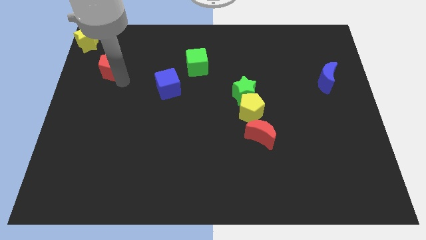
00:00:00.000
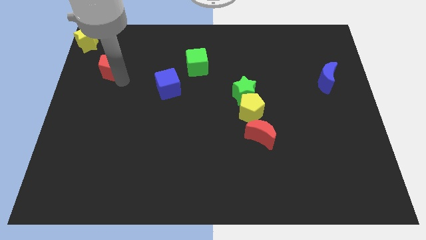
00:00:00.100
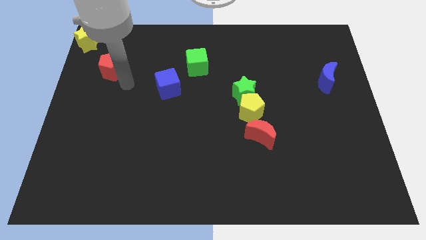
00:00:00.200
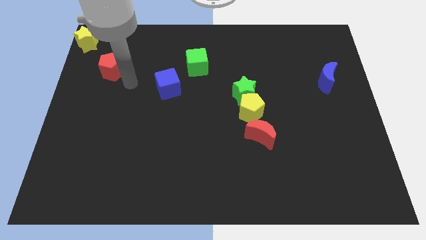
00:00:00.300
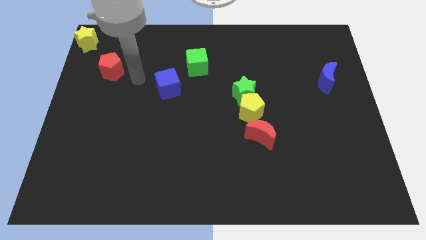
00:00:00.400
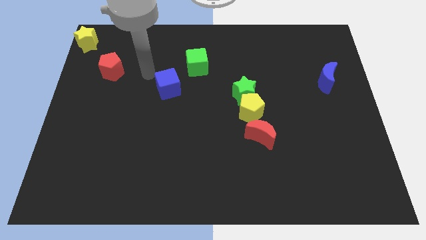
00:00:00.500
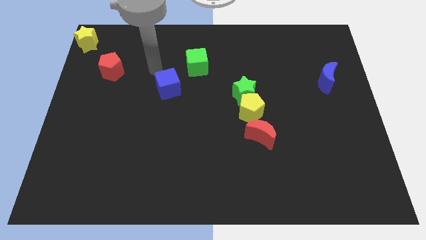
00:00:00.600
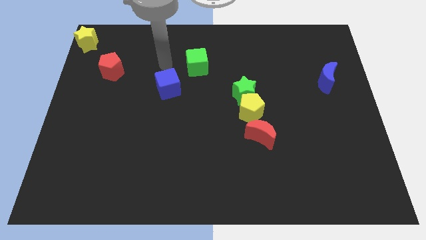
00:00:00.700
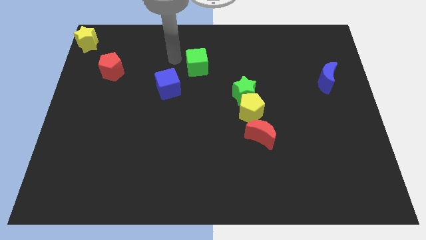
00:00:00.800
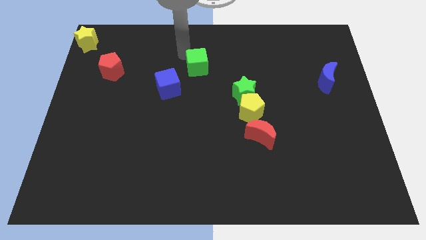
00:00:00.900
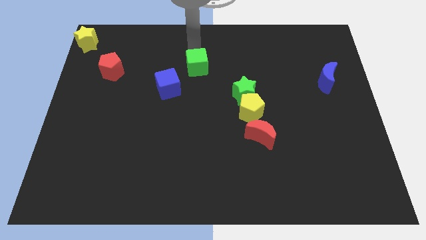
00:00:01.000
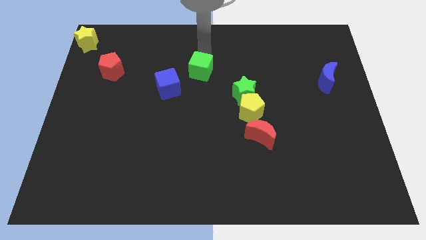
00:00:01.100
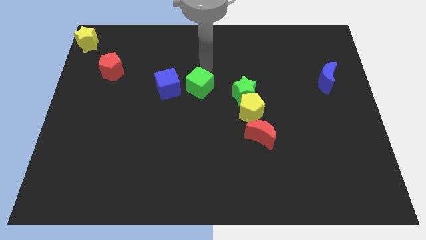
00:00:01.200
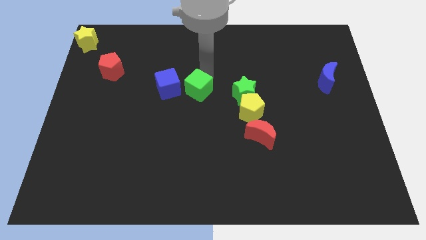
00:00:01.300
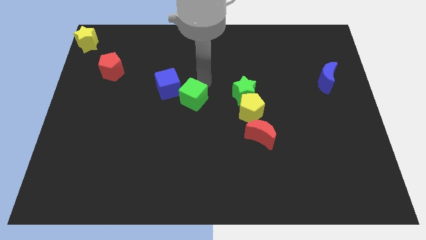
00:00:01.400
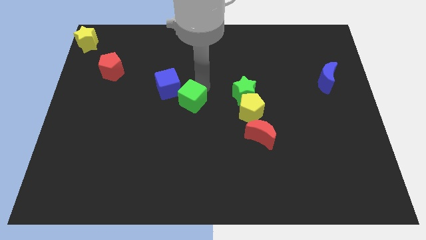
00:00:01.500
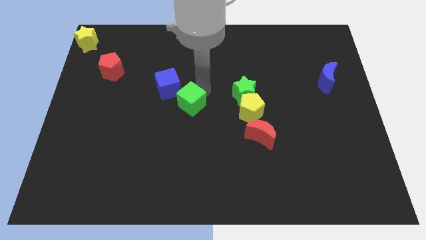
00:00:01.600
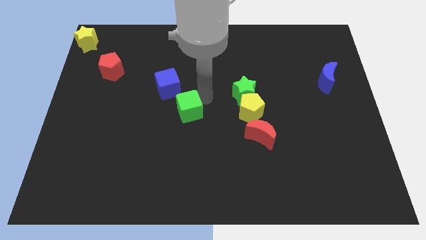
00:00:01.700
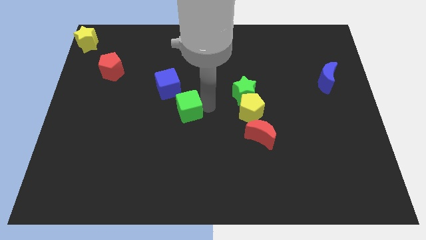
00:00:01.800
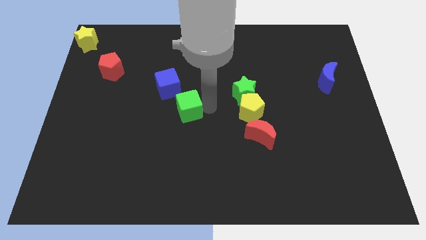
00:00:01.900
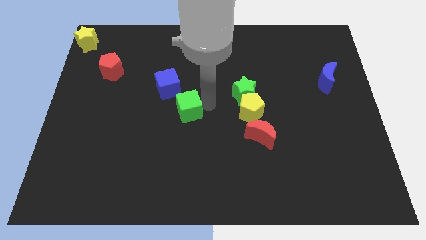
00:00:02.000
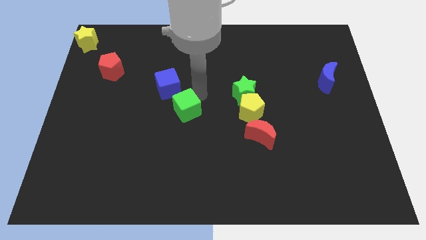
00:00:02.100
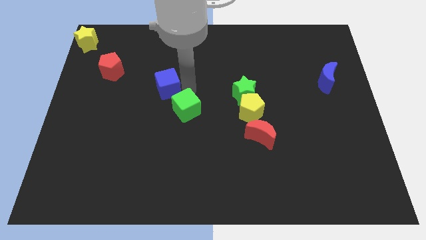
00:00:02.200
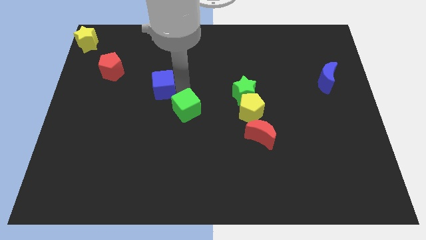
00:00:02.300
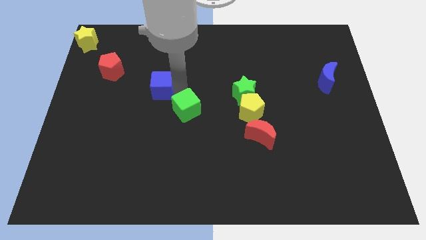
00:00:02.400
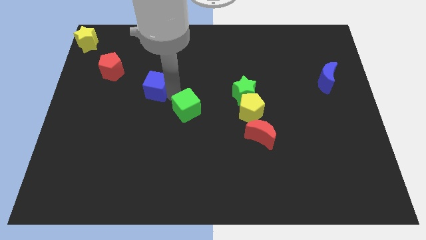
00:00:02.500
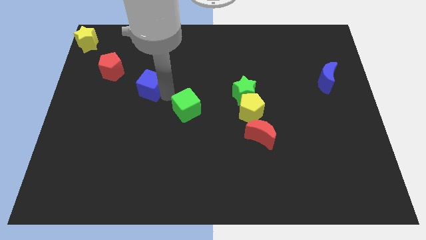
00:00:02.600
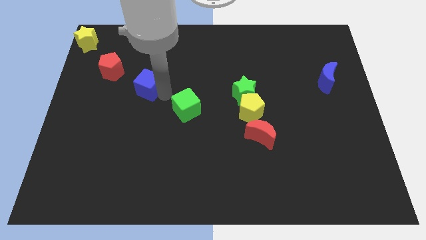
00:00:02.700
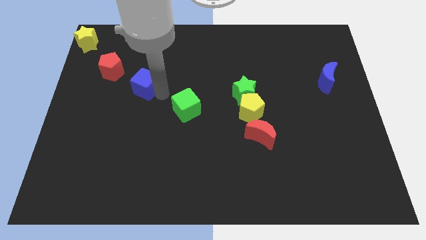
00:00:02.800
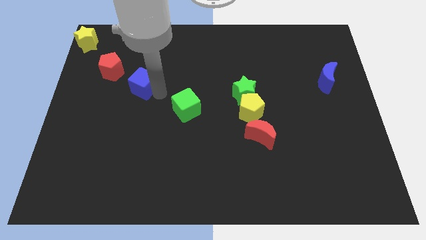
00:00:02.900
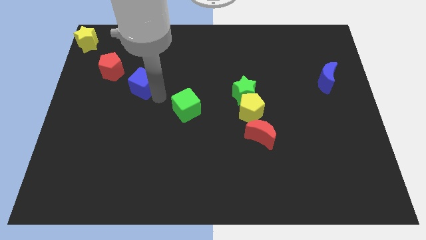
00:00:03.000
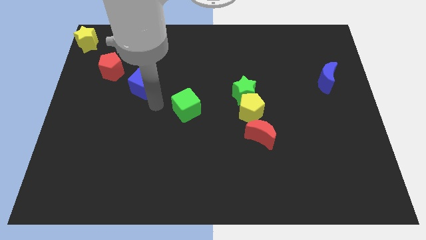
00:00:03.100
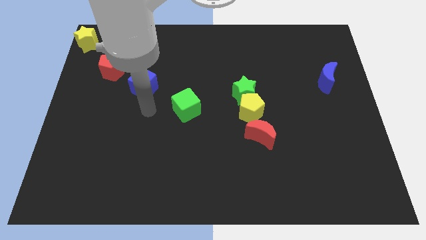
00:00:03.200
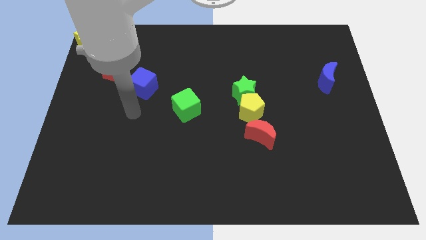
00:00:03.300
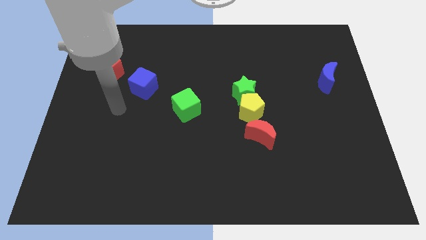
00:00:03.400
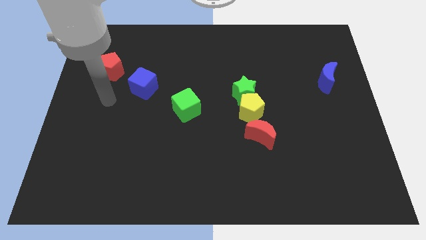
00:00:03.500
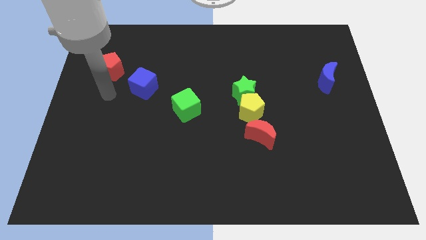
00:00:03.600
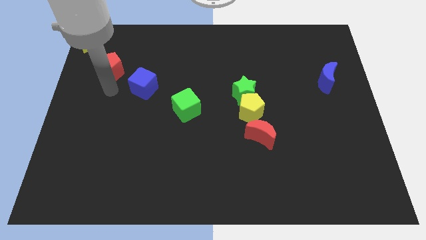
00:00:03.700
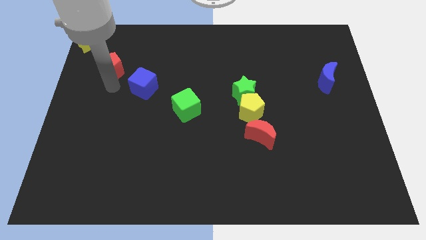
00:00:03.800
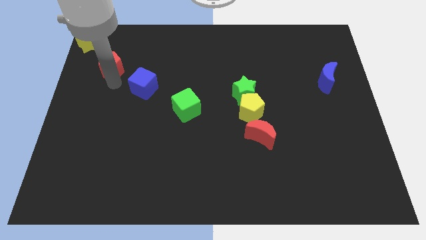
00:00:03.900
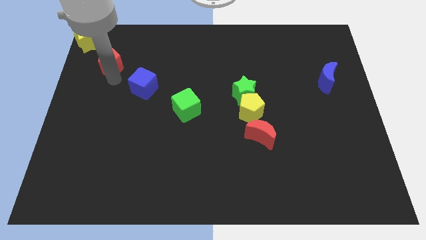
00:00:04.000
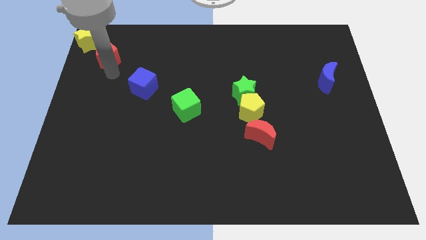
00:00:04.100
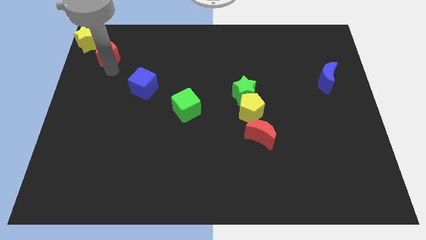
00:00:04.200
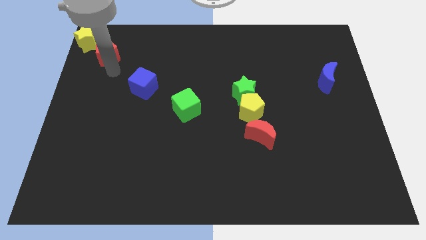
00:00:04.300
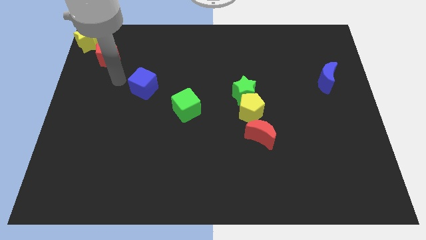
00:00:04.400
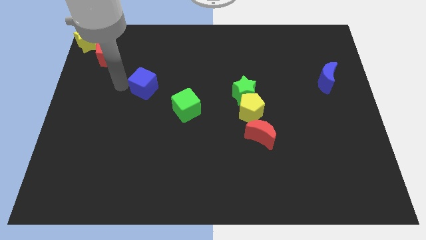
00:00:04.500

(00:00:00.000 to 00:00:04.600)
arrange a group of blocks in a line

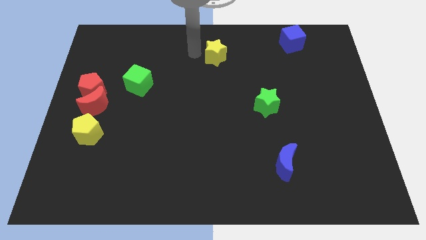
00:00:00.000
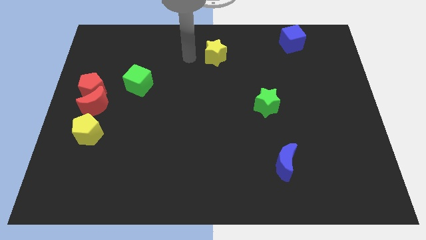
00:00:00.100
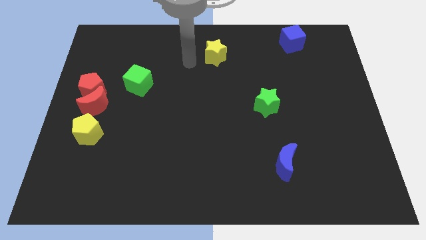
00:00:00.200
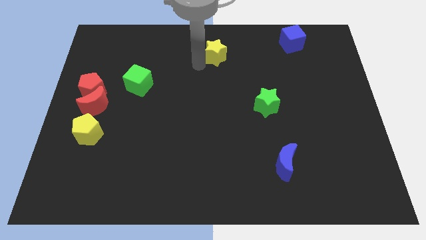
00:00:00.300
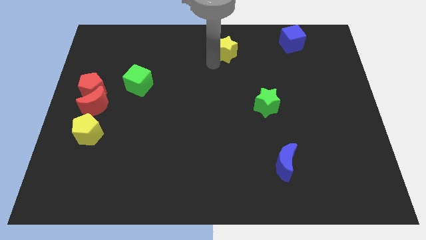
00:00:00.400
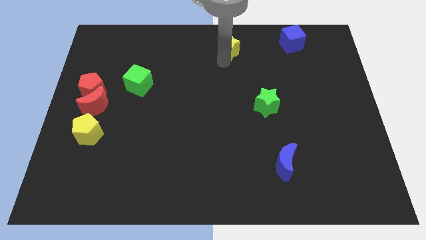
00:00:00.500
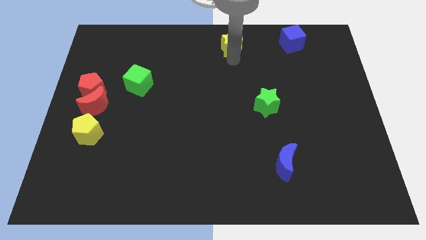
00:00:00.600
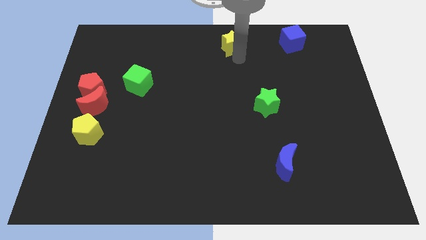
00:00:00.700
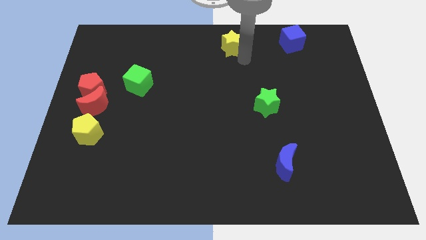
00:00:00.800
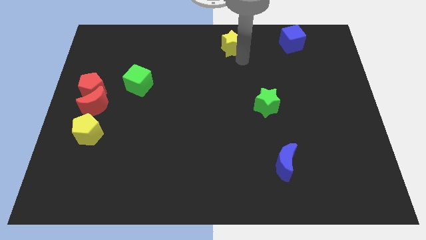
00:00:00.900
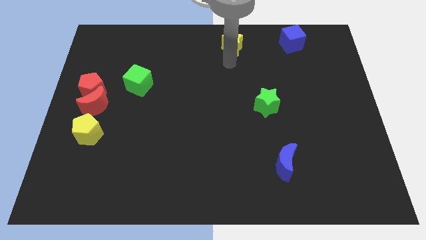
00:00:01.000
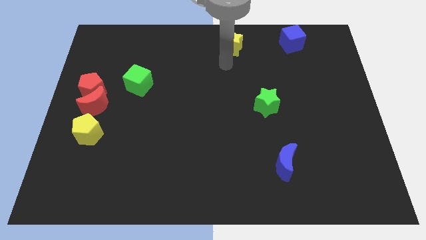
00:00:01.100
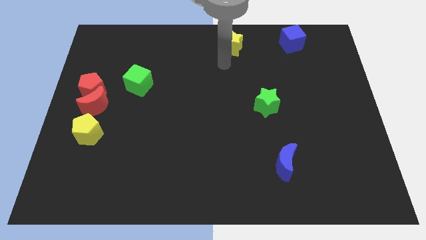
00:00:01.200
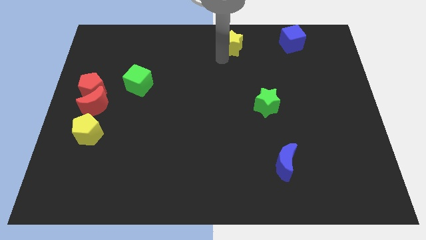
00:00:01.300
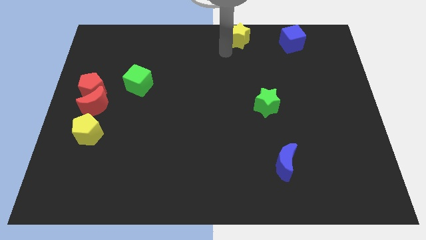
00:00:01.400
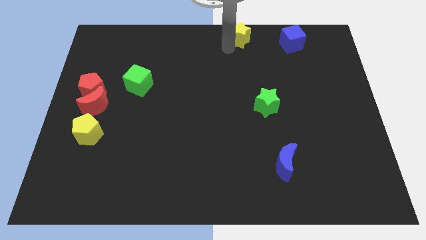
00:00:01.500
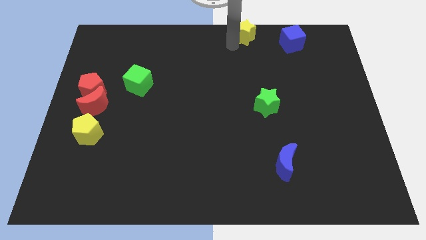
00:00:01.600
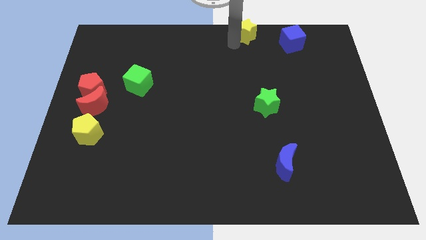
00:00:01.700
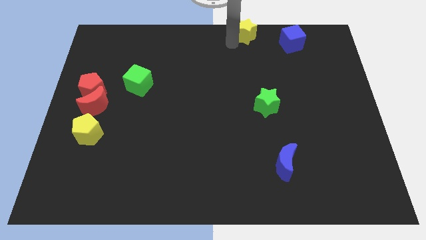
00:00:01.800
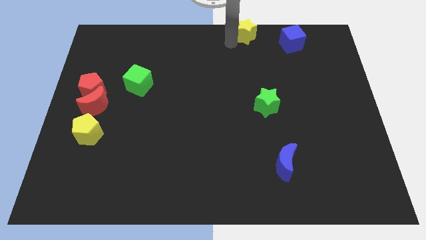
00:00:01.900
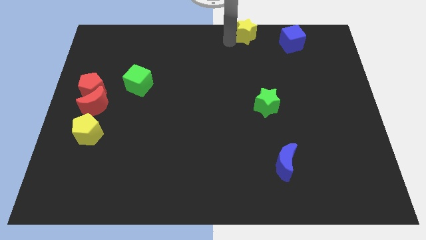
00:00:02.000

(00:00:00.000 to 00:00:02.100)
push the yellow star towards the top of the board

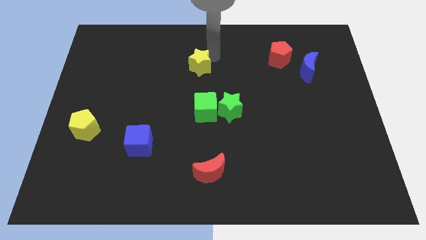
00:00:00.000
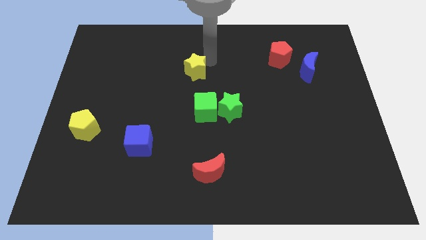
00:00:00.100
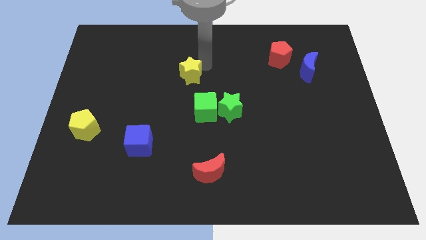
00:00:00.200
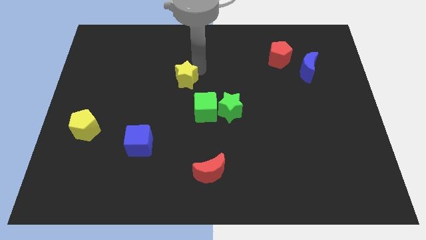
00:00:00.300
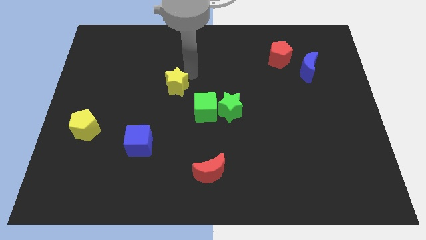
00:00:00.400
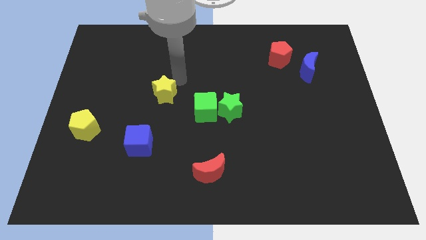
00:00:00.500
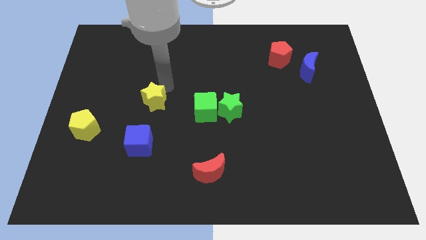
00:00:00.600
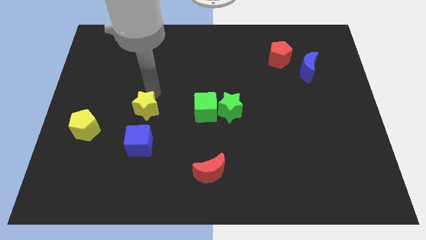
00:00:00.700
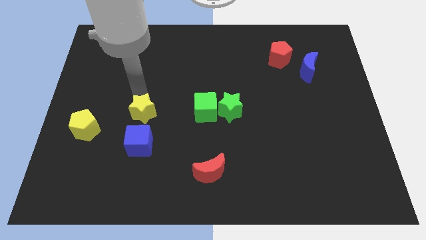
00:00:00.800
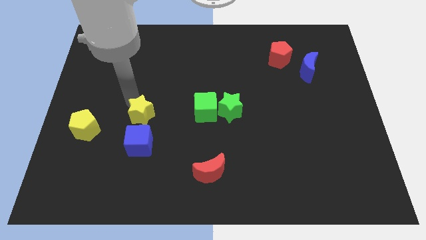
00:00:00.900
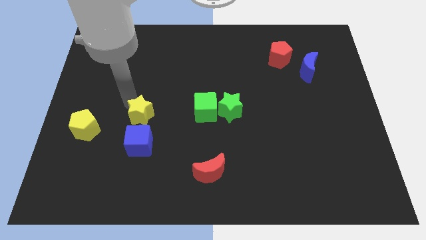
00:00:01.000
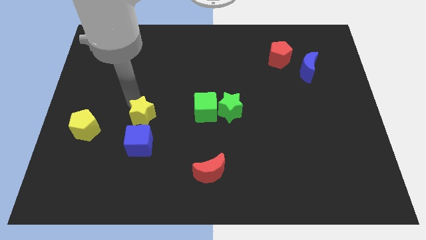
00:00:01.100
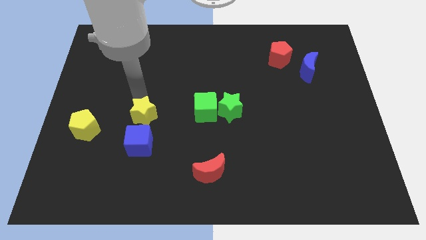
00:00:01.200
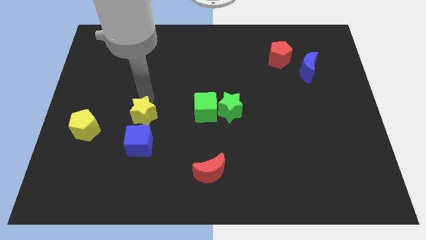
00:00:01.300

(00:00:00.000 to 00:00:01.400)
drag the yellow star towards blue cube

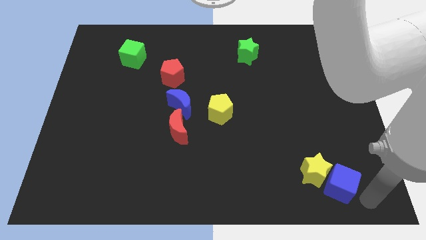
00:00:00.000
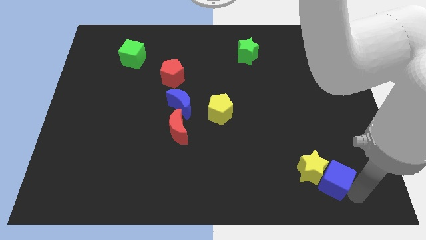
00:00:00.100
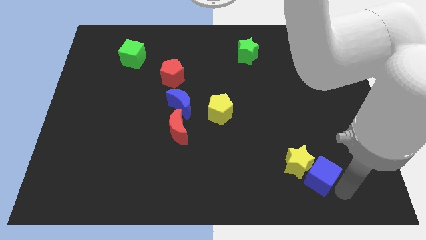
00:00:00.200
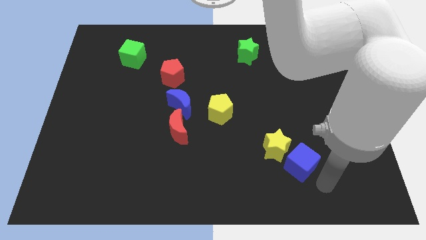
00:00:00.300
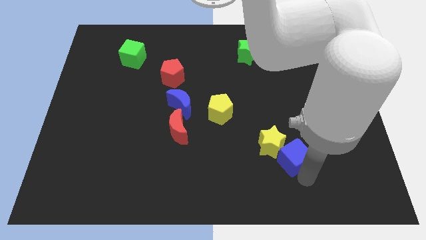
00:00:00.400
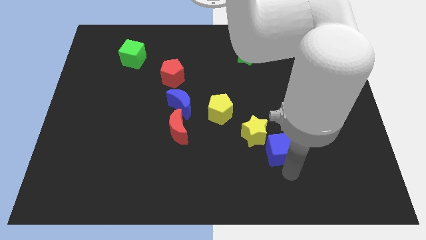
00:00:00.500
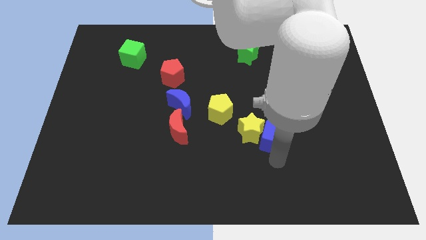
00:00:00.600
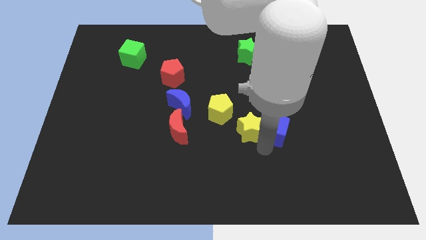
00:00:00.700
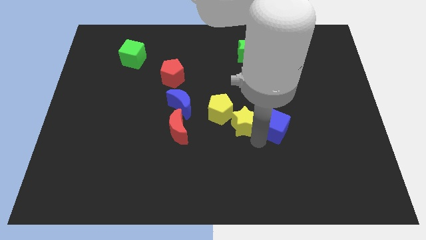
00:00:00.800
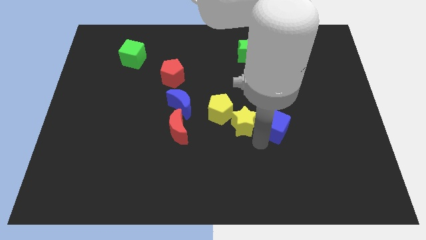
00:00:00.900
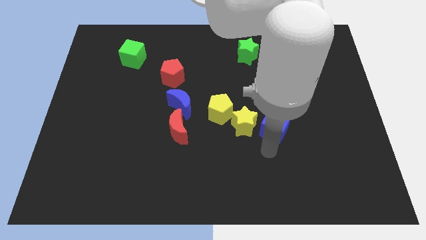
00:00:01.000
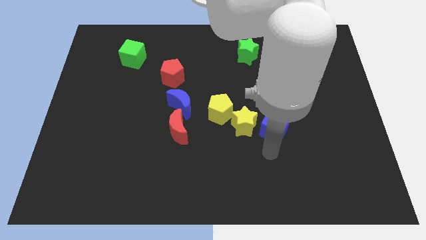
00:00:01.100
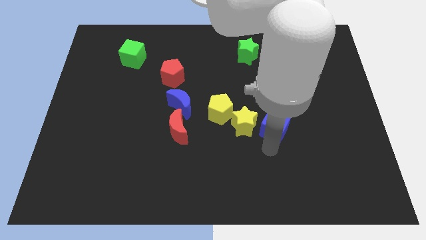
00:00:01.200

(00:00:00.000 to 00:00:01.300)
slide the blue cube along with the yellow star close to the yellow pentagon
